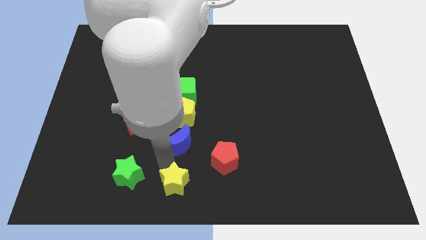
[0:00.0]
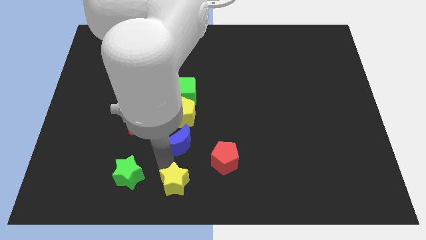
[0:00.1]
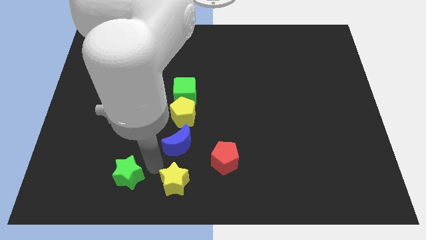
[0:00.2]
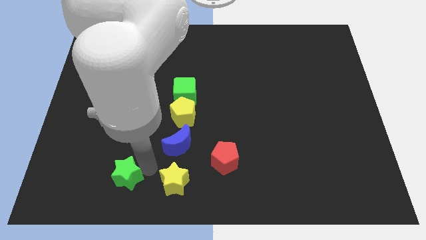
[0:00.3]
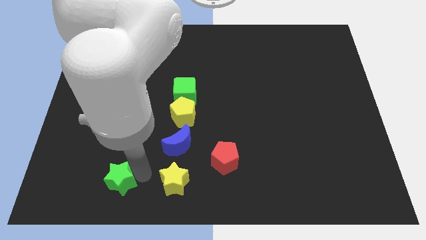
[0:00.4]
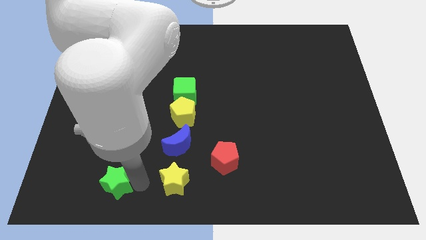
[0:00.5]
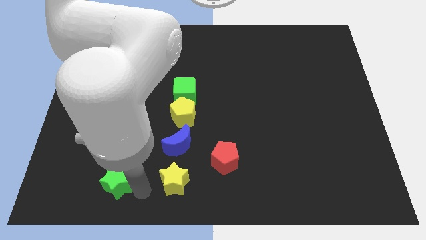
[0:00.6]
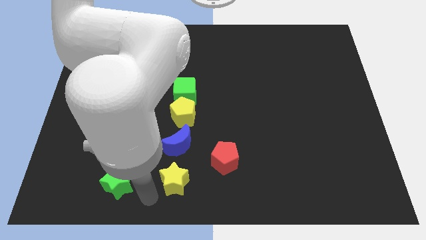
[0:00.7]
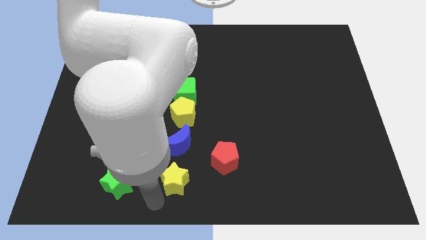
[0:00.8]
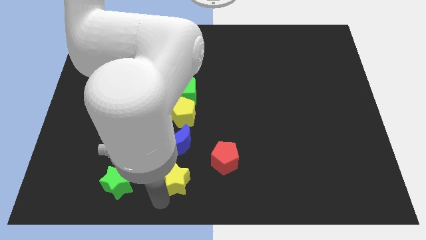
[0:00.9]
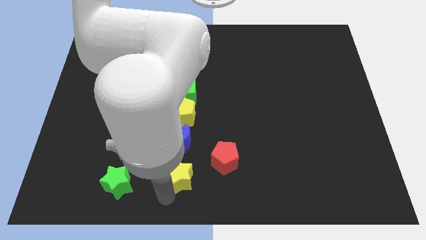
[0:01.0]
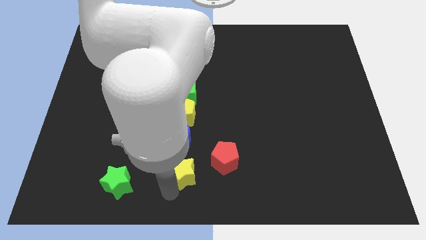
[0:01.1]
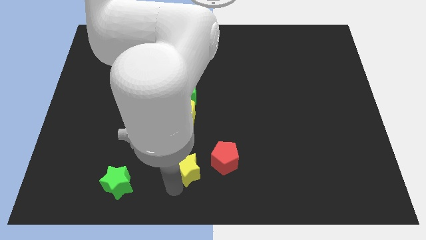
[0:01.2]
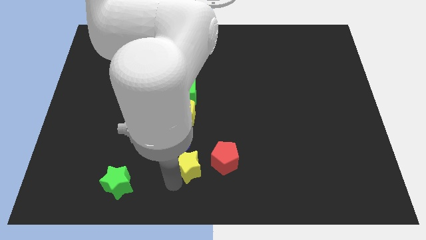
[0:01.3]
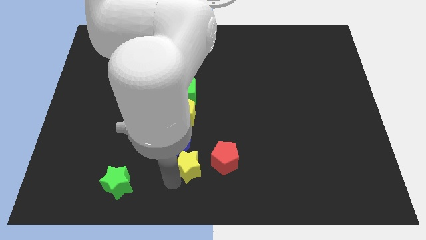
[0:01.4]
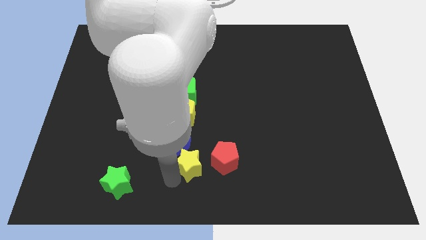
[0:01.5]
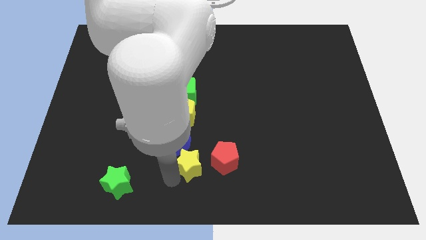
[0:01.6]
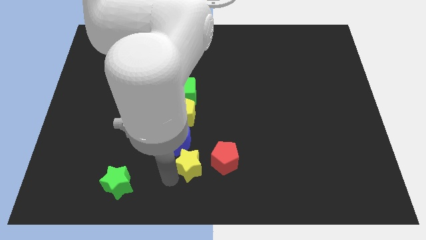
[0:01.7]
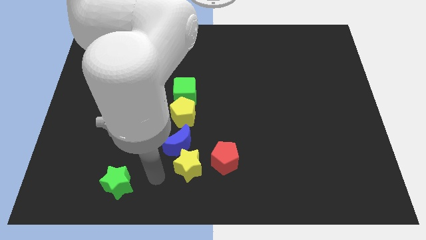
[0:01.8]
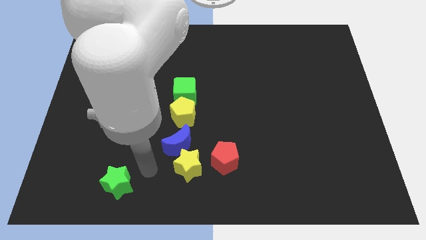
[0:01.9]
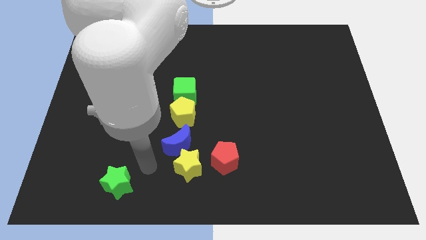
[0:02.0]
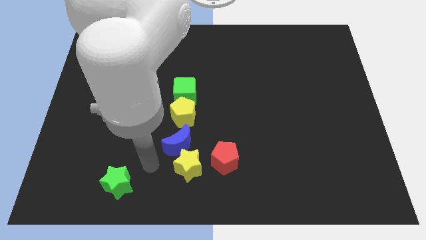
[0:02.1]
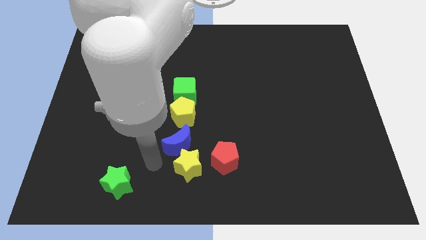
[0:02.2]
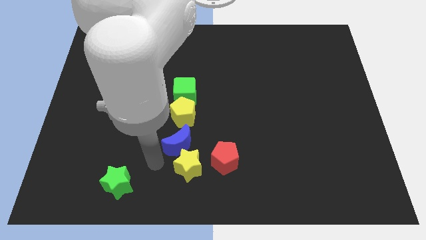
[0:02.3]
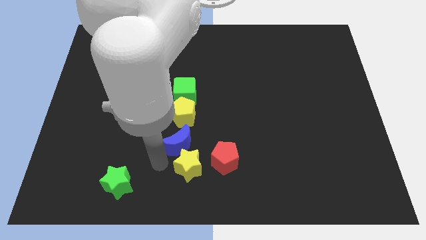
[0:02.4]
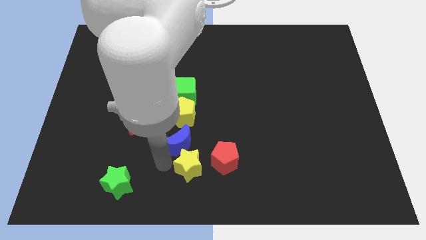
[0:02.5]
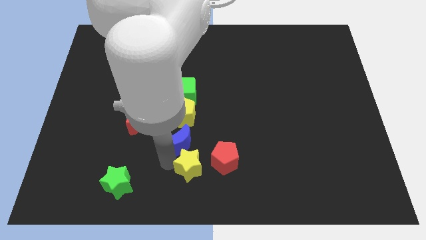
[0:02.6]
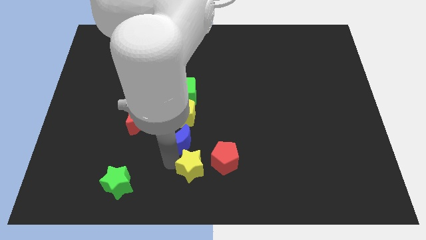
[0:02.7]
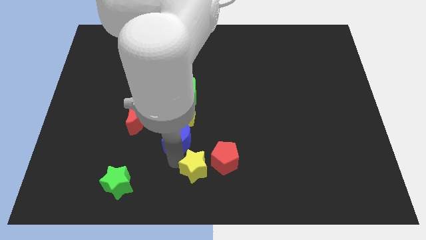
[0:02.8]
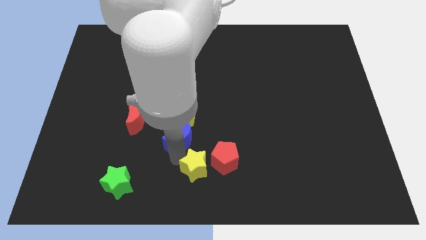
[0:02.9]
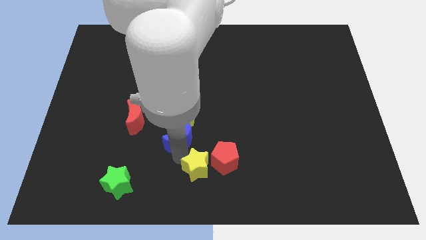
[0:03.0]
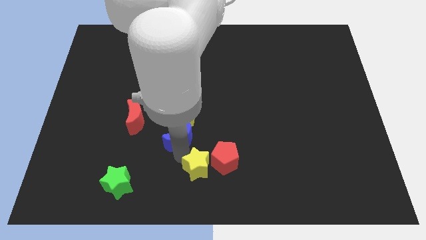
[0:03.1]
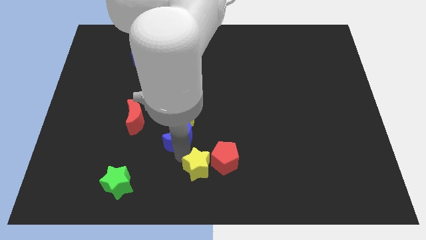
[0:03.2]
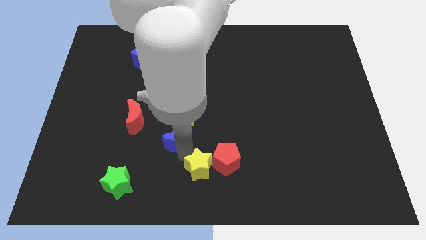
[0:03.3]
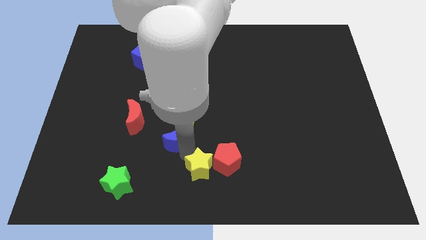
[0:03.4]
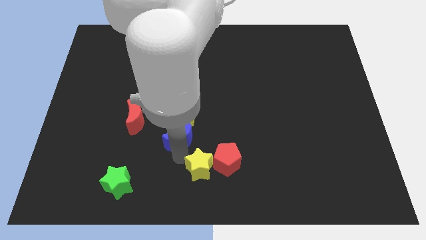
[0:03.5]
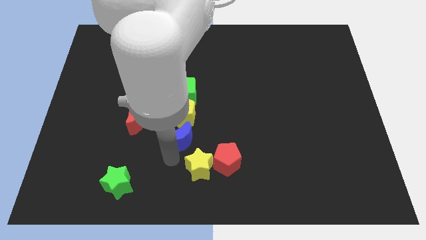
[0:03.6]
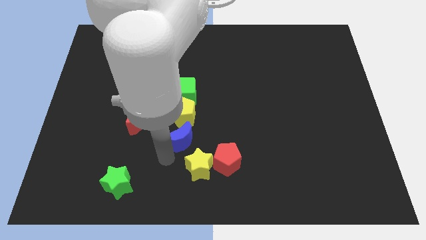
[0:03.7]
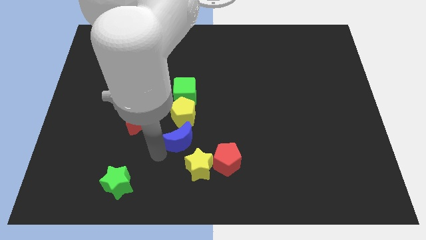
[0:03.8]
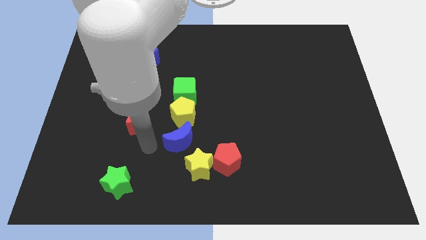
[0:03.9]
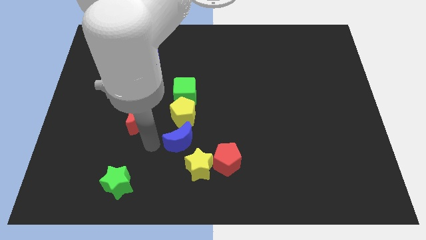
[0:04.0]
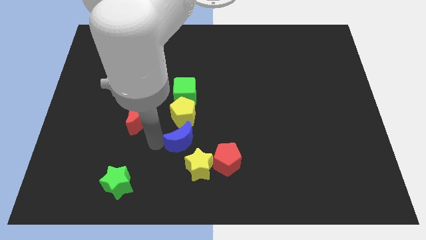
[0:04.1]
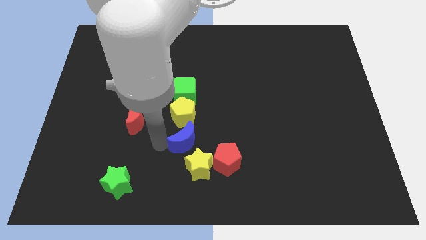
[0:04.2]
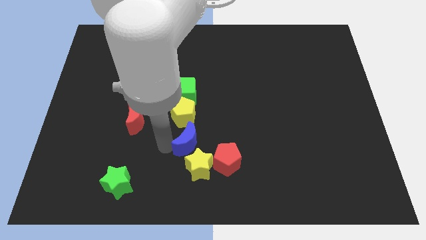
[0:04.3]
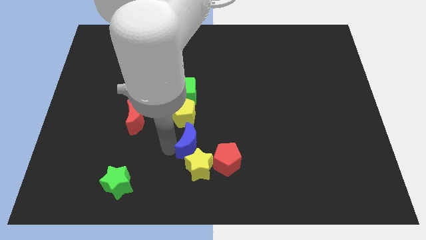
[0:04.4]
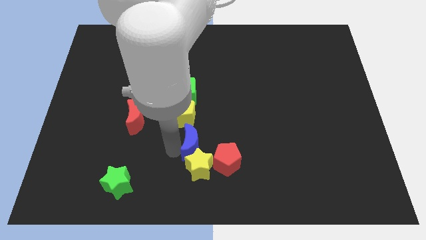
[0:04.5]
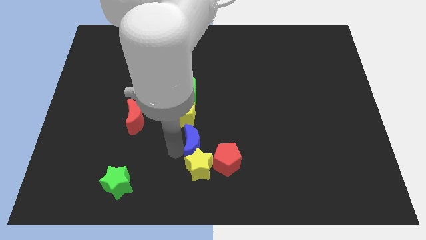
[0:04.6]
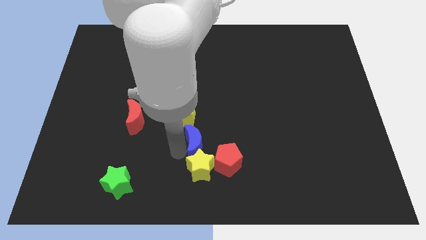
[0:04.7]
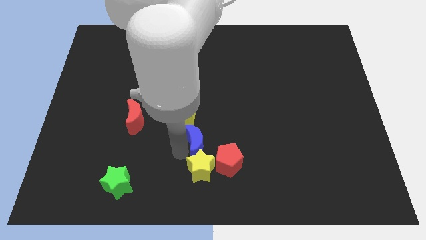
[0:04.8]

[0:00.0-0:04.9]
slightly move the blue moon towards the right

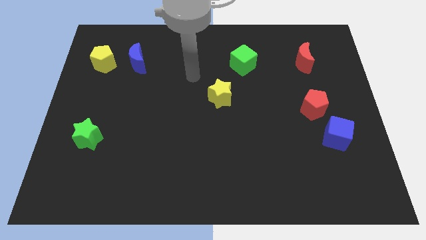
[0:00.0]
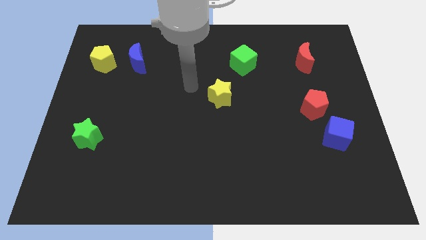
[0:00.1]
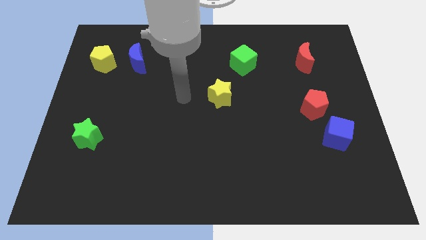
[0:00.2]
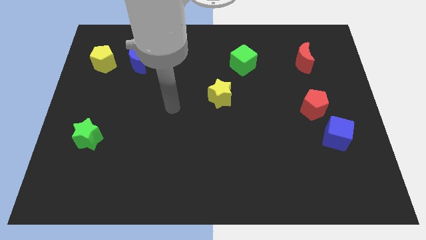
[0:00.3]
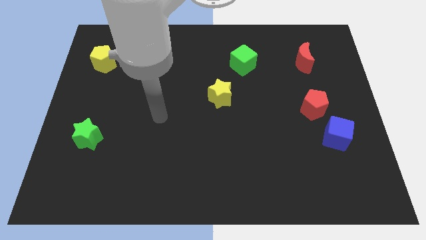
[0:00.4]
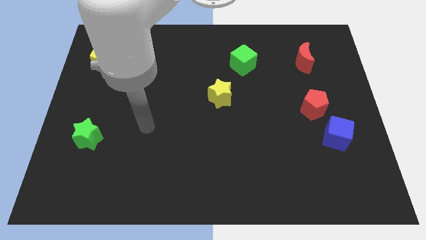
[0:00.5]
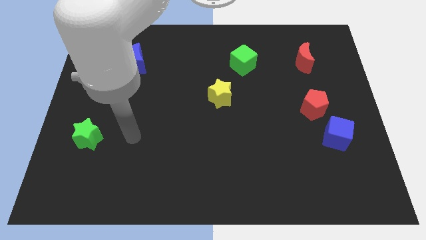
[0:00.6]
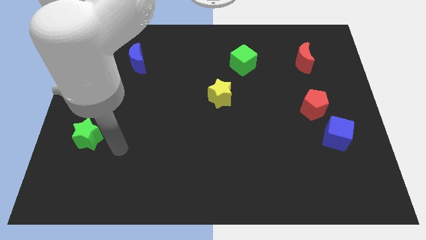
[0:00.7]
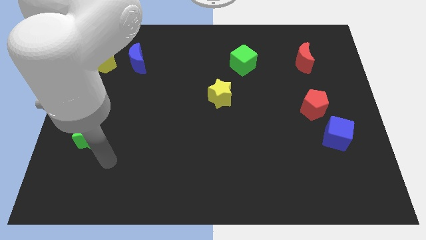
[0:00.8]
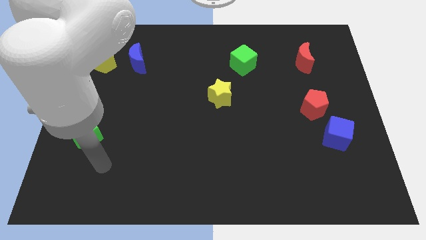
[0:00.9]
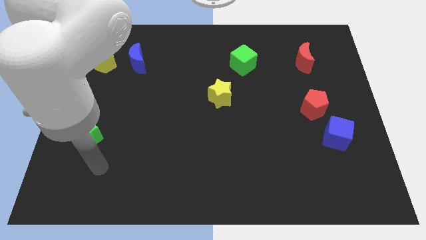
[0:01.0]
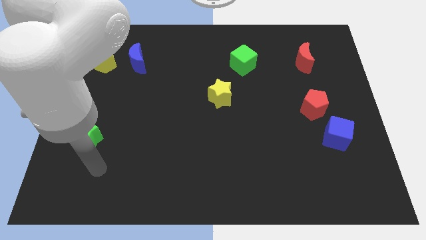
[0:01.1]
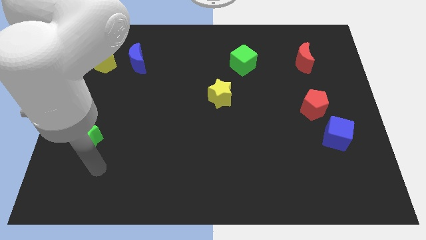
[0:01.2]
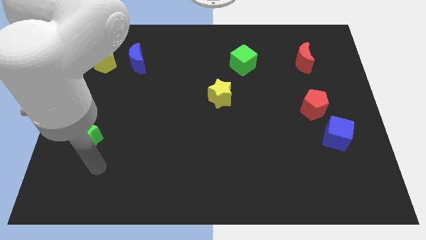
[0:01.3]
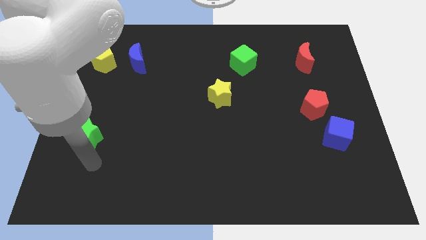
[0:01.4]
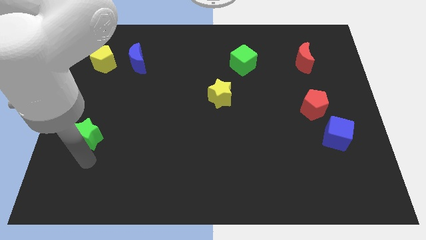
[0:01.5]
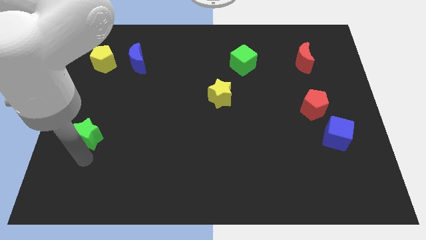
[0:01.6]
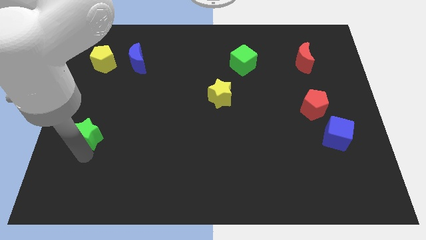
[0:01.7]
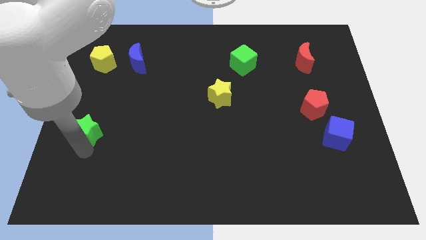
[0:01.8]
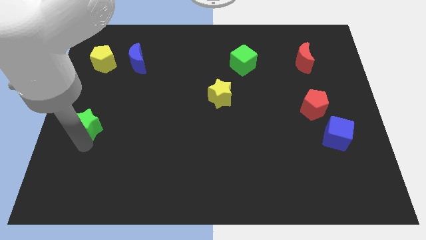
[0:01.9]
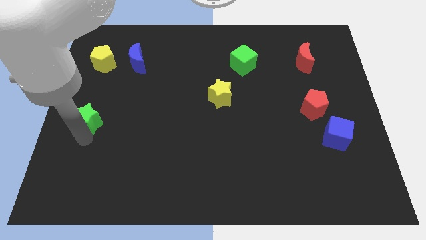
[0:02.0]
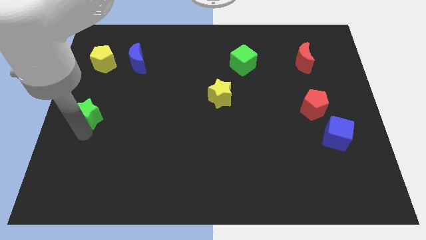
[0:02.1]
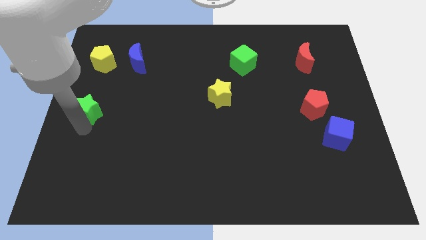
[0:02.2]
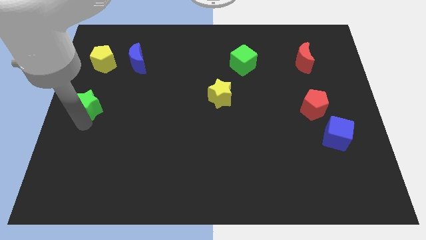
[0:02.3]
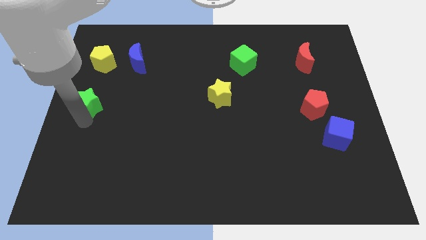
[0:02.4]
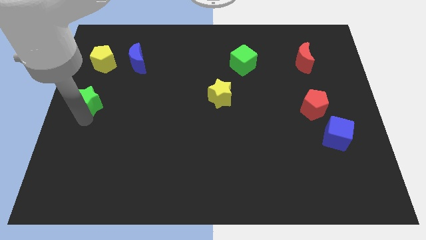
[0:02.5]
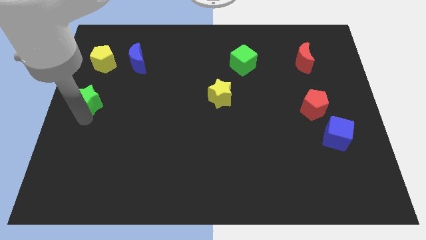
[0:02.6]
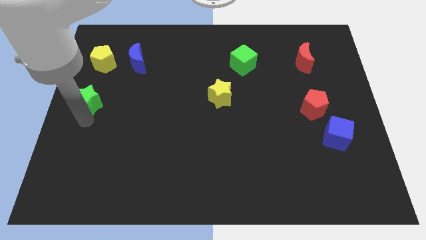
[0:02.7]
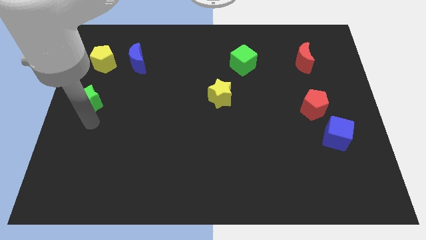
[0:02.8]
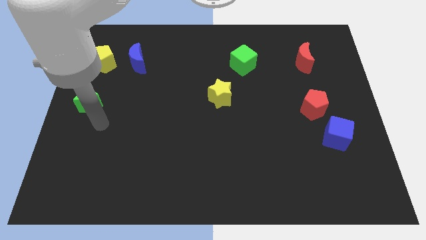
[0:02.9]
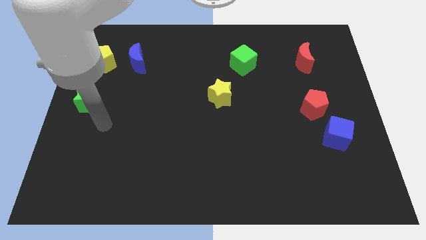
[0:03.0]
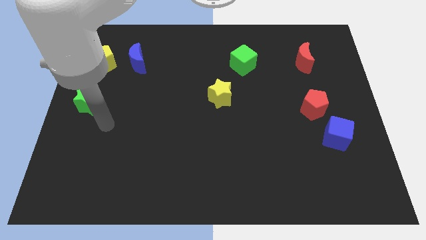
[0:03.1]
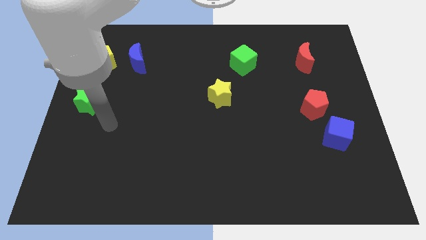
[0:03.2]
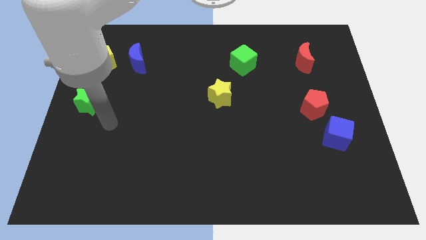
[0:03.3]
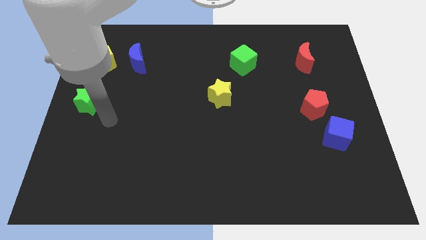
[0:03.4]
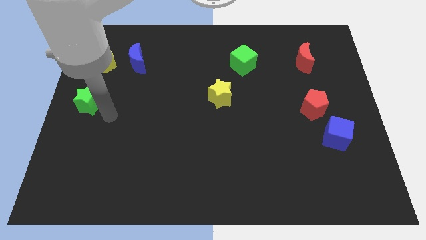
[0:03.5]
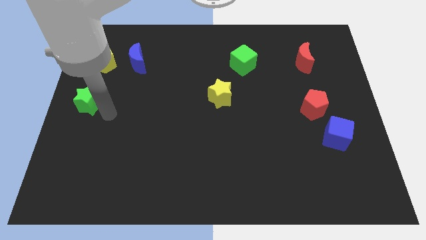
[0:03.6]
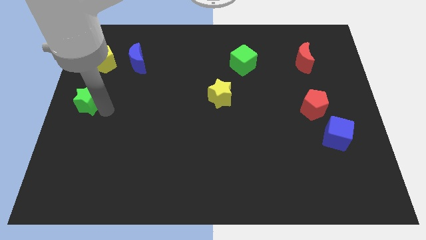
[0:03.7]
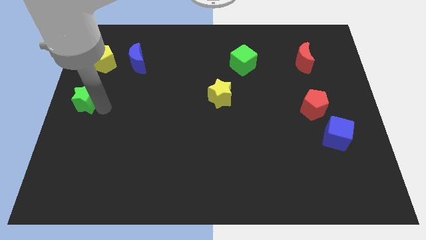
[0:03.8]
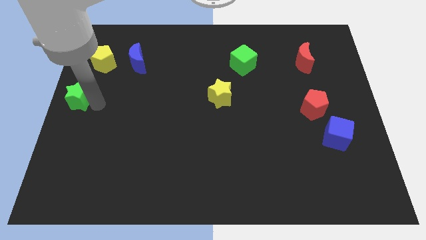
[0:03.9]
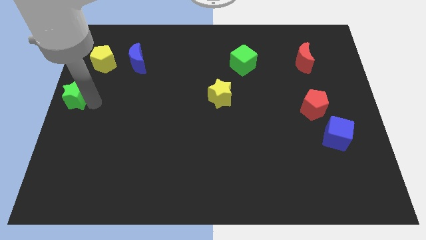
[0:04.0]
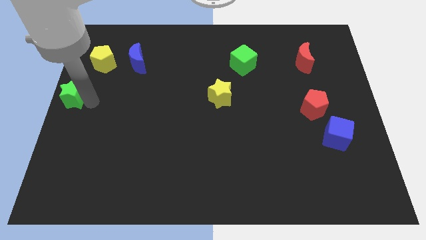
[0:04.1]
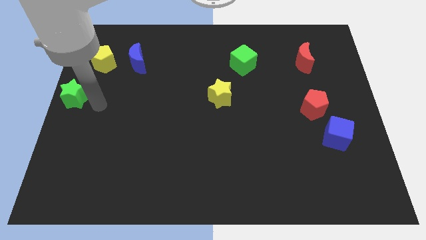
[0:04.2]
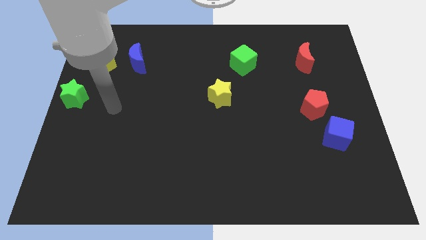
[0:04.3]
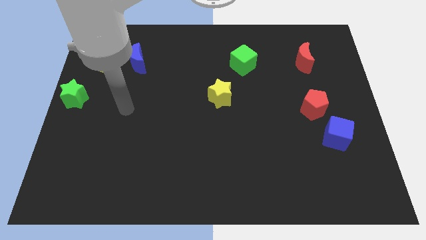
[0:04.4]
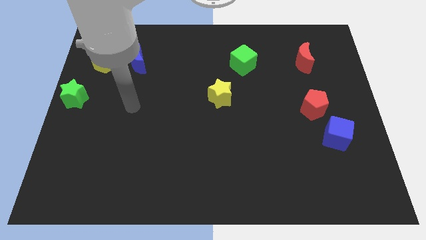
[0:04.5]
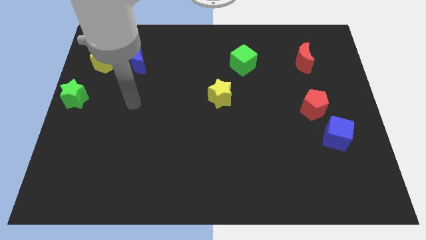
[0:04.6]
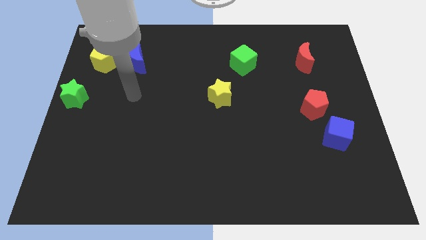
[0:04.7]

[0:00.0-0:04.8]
move the green star to the left center of the board
